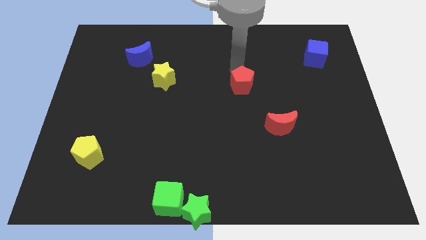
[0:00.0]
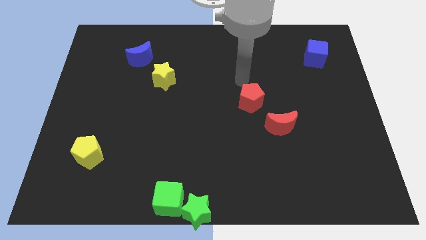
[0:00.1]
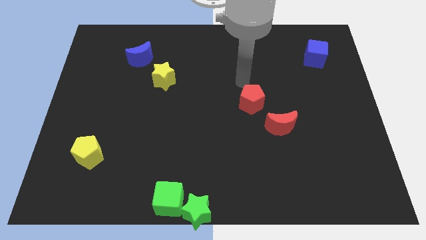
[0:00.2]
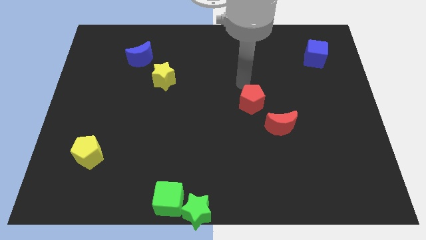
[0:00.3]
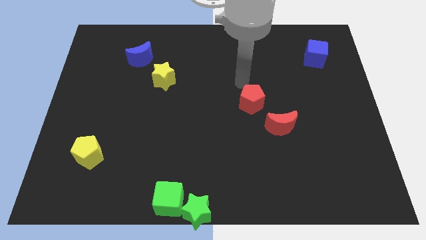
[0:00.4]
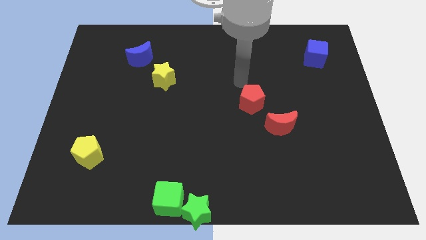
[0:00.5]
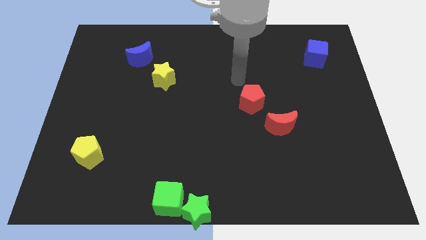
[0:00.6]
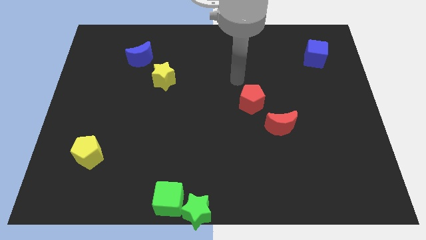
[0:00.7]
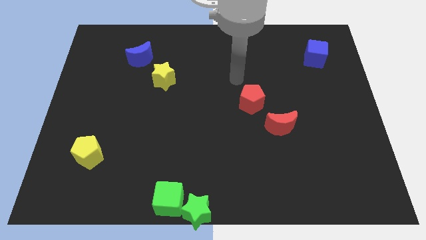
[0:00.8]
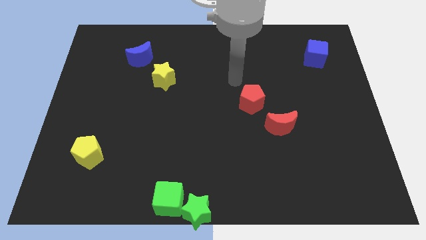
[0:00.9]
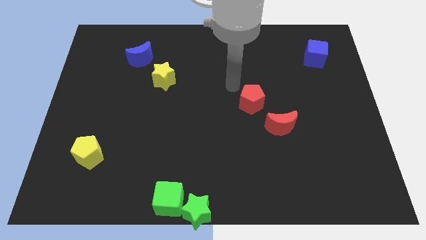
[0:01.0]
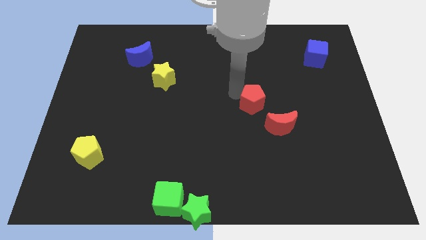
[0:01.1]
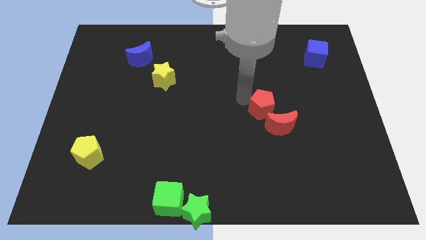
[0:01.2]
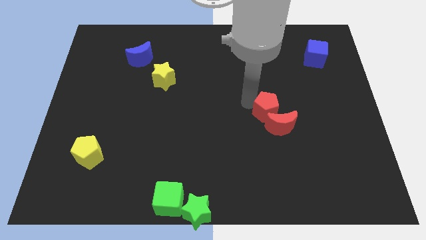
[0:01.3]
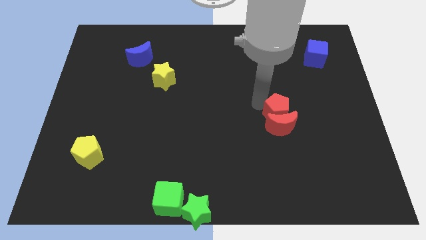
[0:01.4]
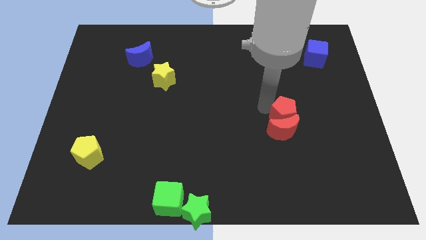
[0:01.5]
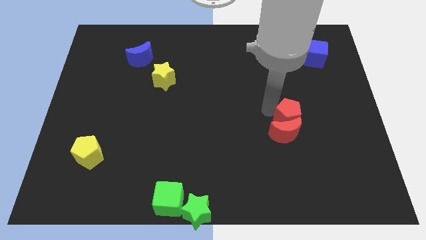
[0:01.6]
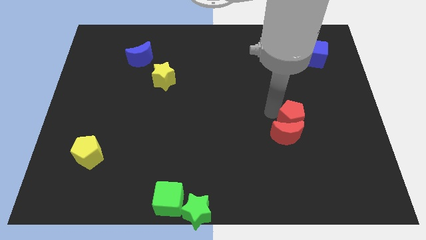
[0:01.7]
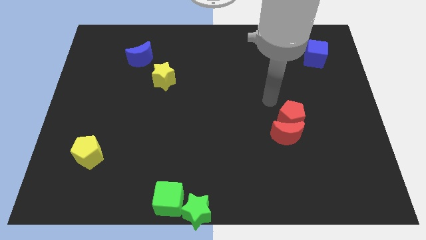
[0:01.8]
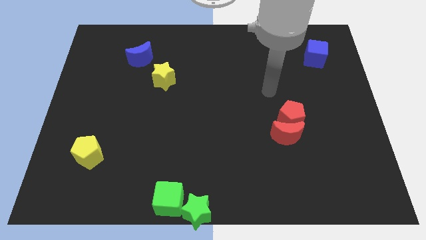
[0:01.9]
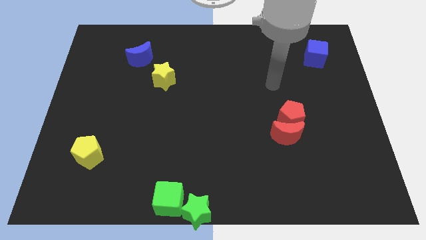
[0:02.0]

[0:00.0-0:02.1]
push the red pentagon into the red crescent

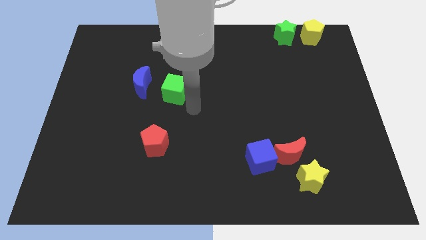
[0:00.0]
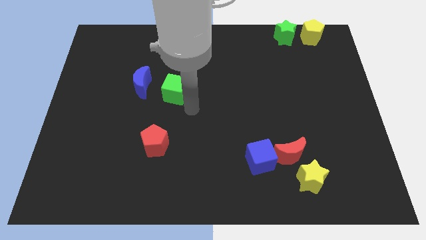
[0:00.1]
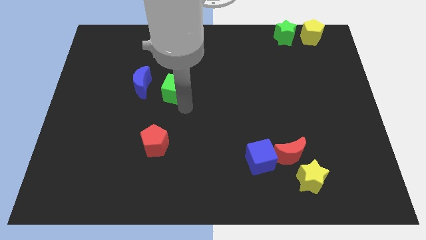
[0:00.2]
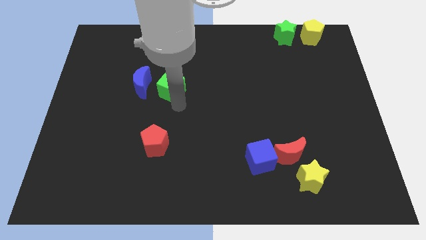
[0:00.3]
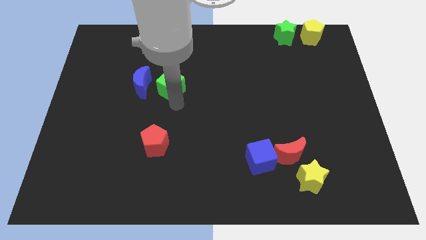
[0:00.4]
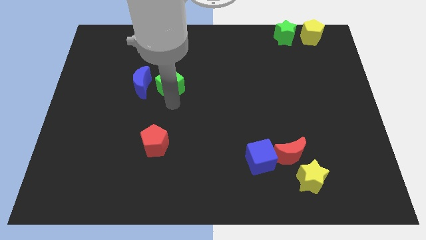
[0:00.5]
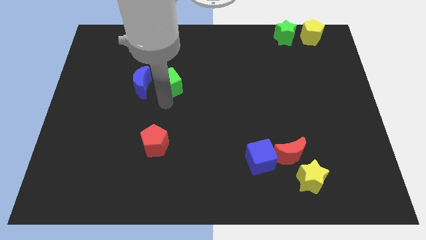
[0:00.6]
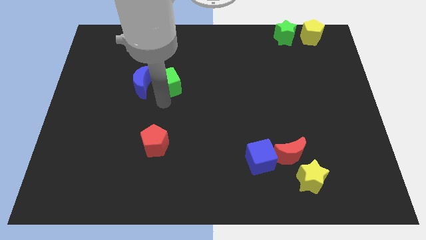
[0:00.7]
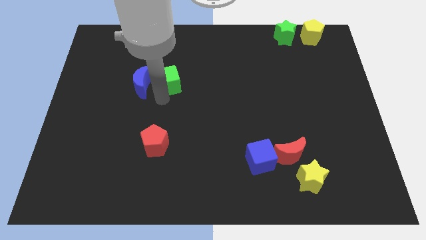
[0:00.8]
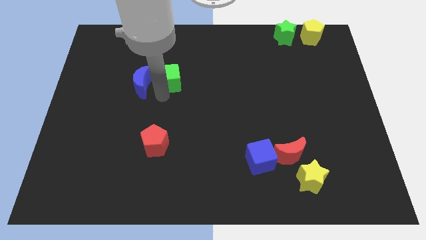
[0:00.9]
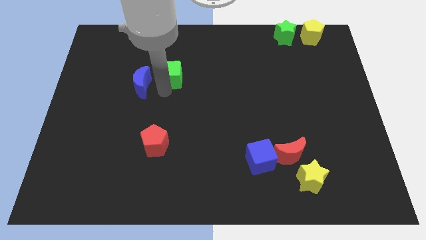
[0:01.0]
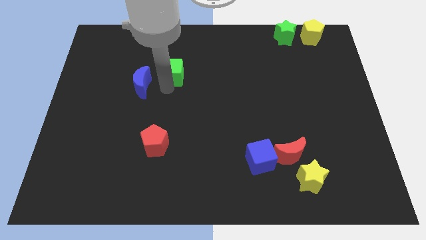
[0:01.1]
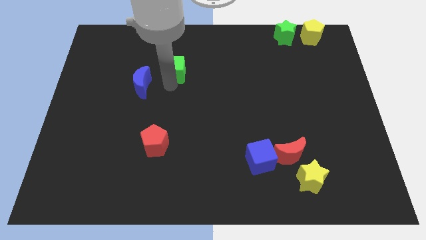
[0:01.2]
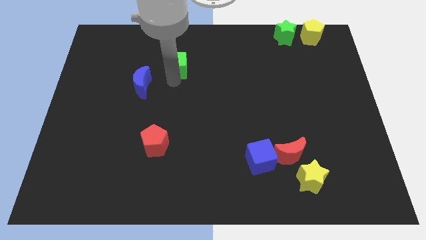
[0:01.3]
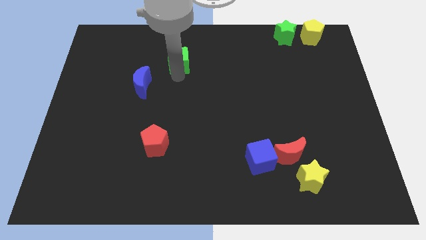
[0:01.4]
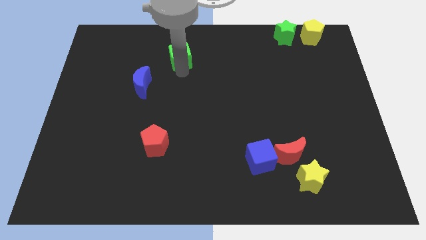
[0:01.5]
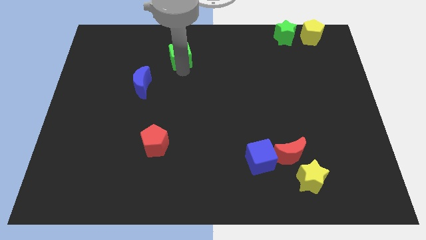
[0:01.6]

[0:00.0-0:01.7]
place green cube to the top right of blue moon

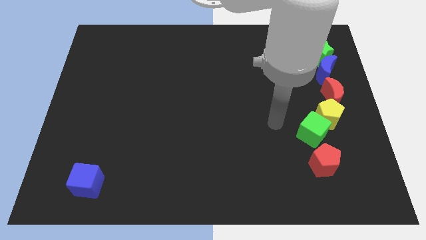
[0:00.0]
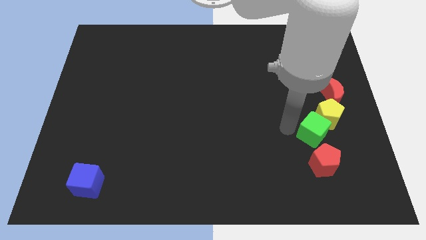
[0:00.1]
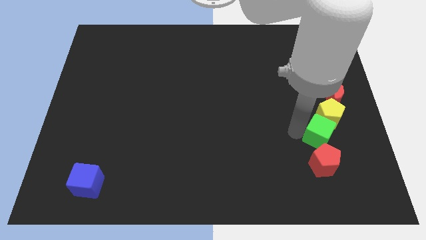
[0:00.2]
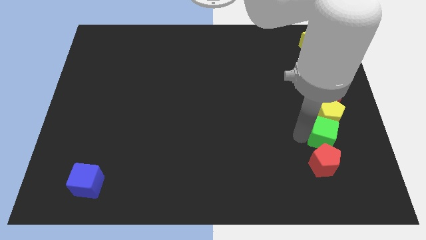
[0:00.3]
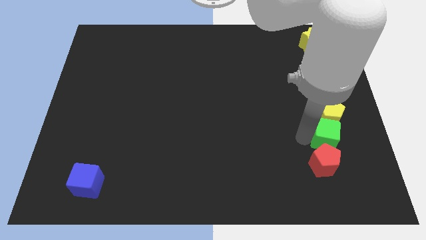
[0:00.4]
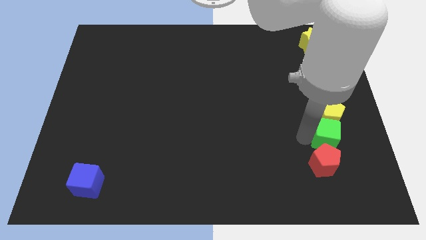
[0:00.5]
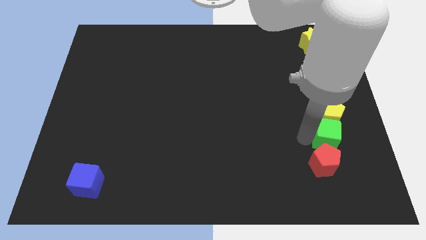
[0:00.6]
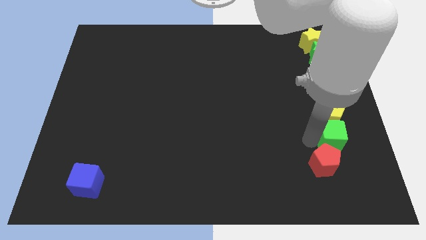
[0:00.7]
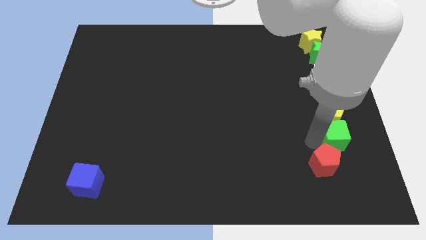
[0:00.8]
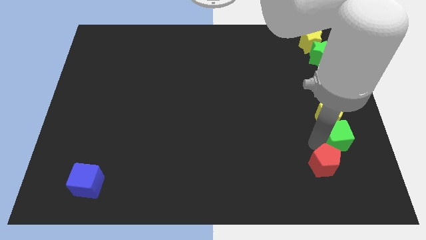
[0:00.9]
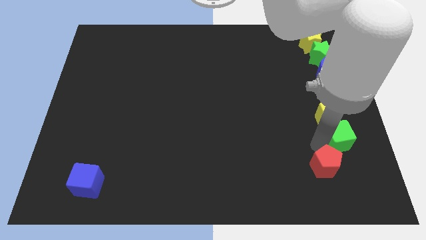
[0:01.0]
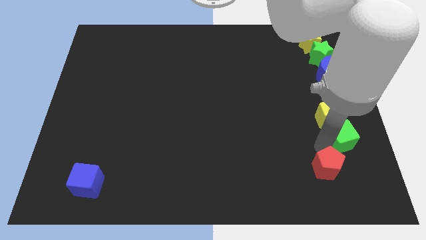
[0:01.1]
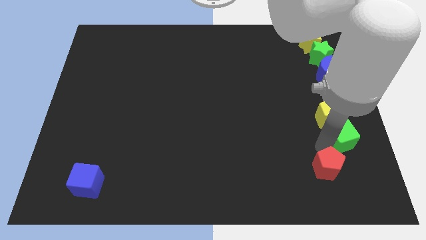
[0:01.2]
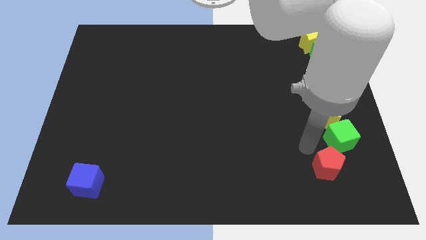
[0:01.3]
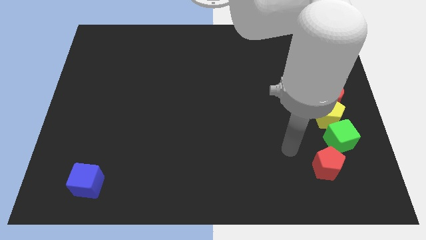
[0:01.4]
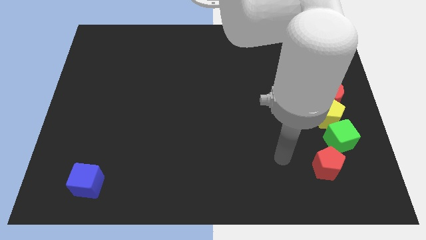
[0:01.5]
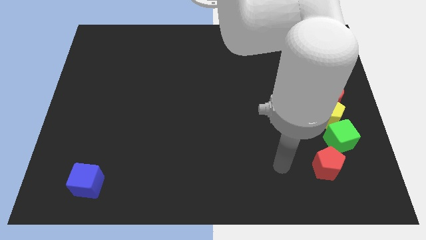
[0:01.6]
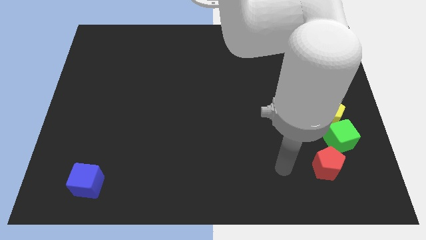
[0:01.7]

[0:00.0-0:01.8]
push the green cube below the yellow pentagon

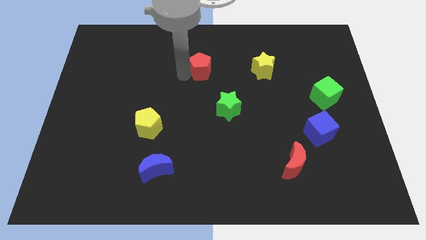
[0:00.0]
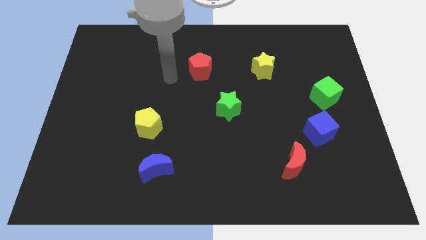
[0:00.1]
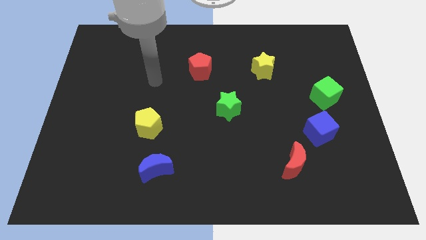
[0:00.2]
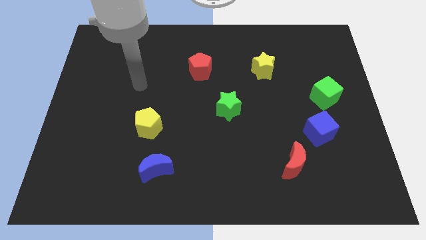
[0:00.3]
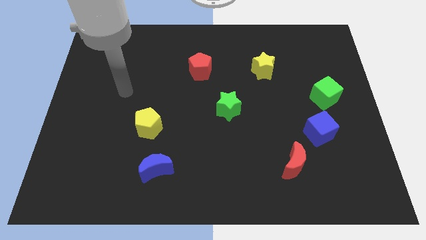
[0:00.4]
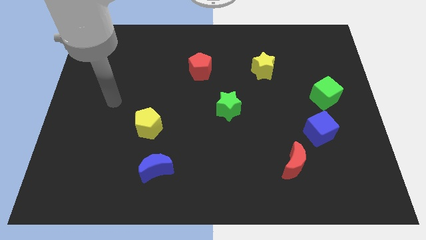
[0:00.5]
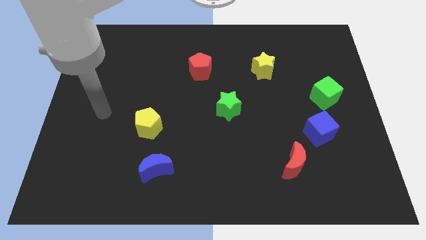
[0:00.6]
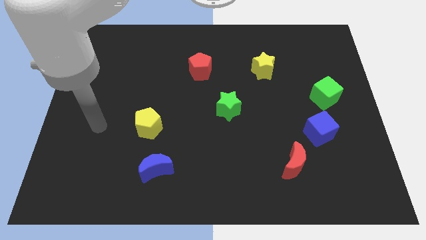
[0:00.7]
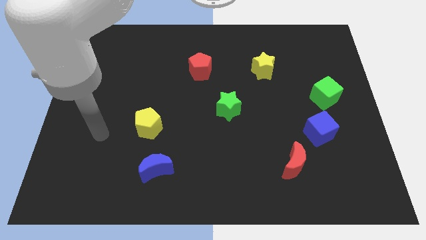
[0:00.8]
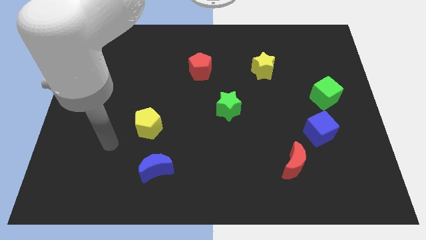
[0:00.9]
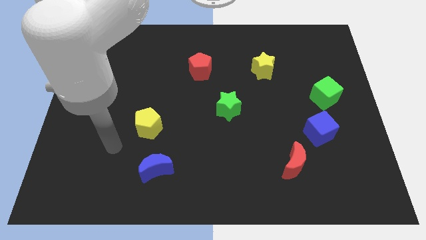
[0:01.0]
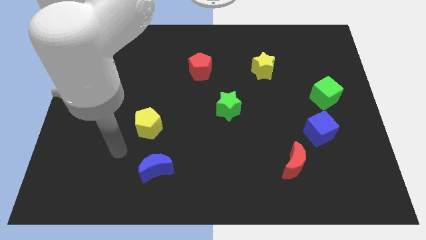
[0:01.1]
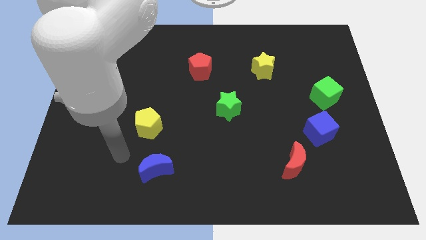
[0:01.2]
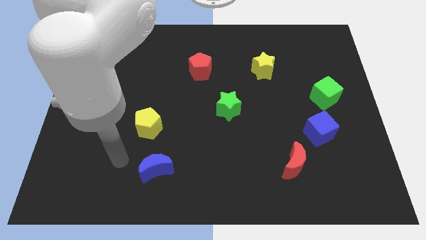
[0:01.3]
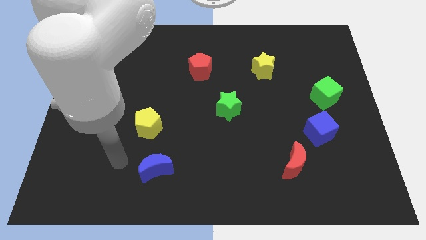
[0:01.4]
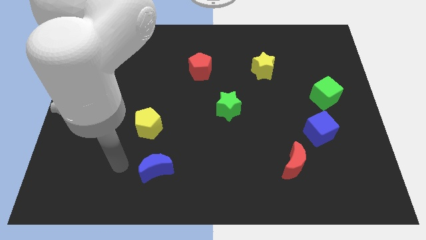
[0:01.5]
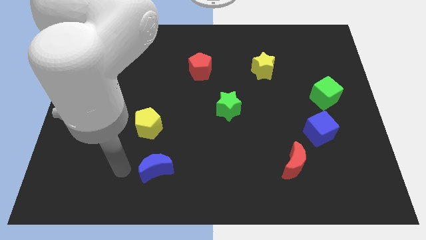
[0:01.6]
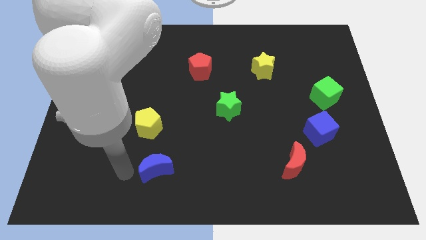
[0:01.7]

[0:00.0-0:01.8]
point your arm at the left side of the blue crescent

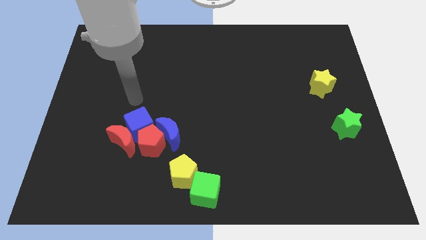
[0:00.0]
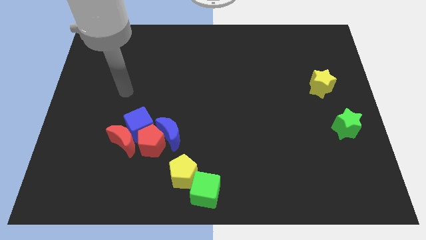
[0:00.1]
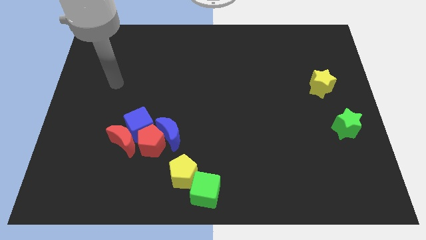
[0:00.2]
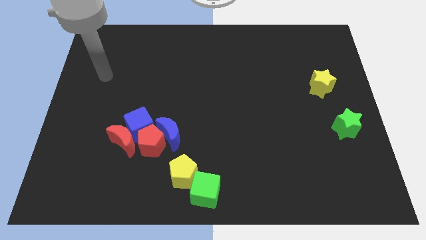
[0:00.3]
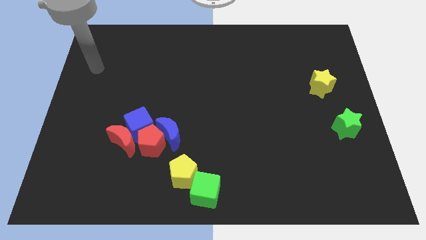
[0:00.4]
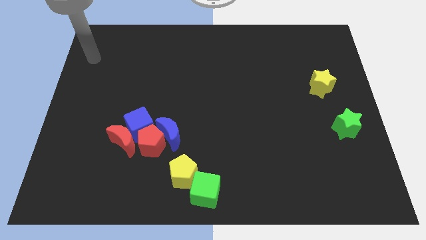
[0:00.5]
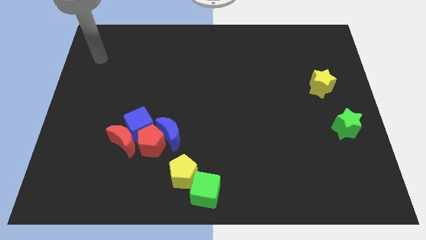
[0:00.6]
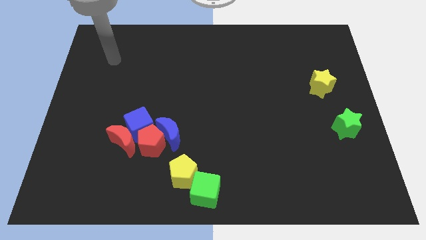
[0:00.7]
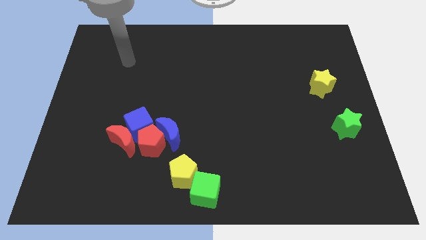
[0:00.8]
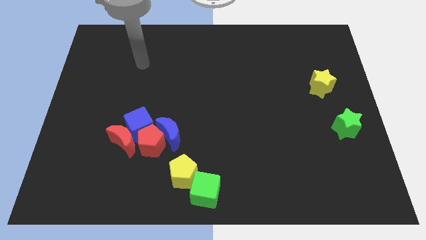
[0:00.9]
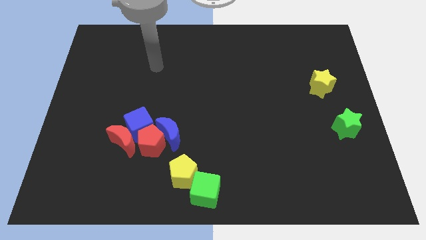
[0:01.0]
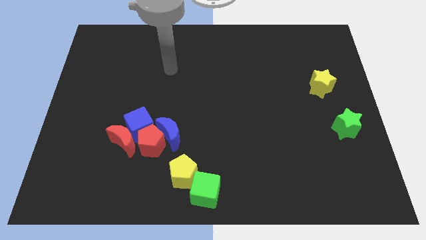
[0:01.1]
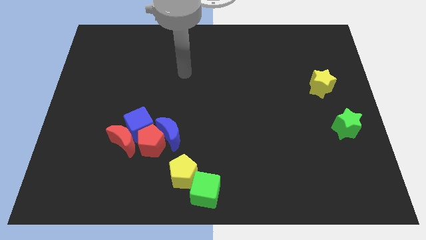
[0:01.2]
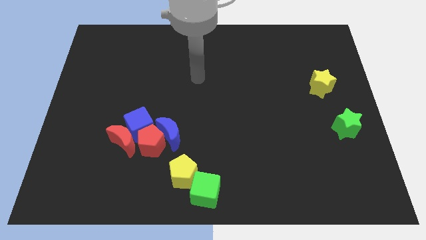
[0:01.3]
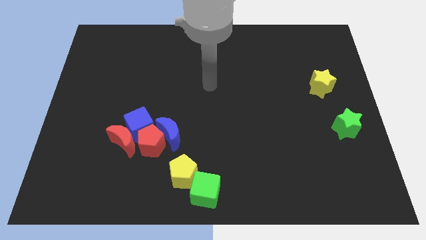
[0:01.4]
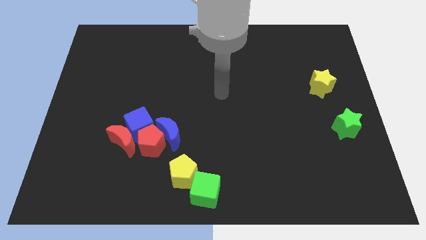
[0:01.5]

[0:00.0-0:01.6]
place your hand at center of the board

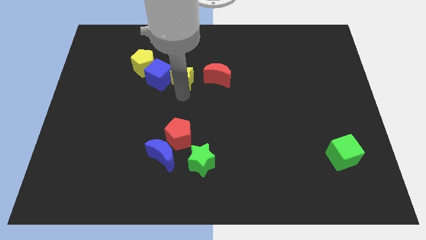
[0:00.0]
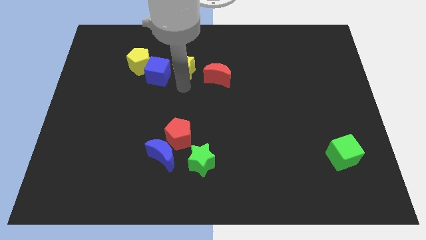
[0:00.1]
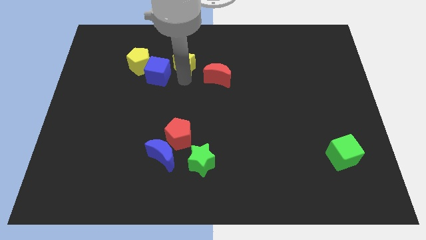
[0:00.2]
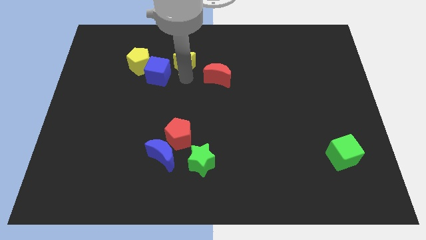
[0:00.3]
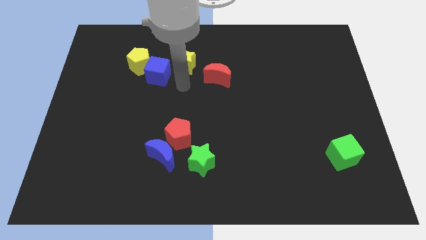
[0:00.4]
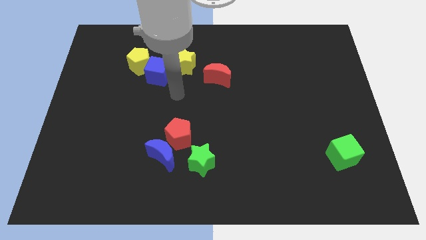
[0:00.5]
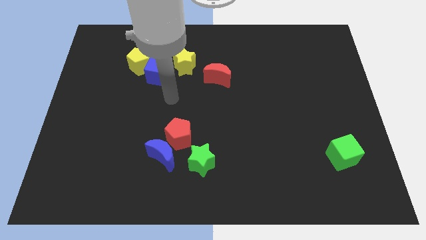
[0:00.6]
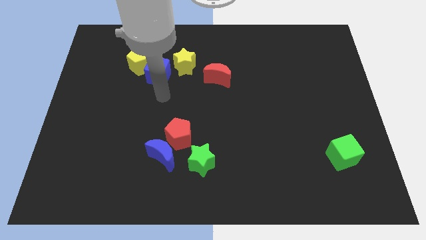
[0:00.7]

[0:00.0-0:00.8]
push yellow star slightly upwards
